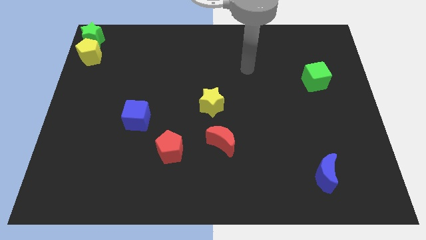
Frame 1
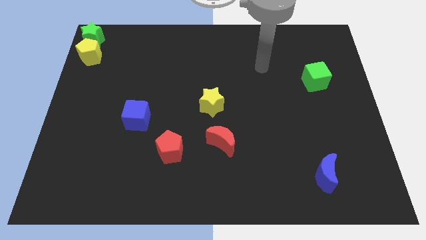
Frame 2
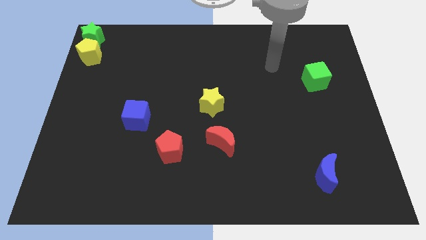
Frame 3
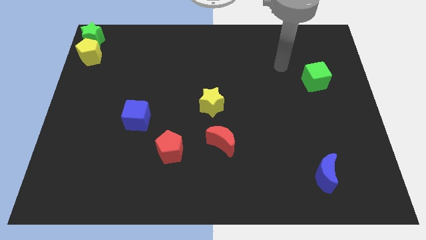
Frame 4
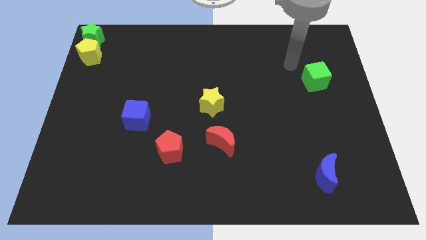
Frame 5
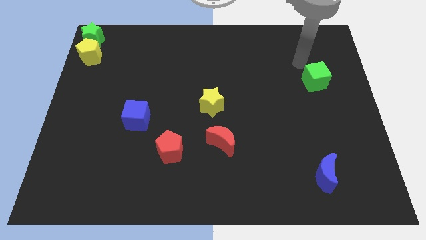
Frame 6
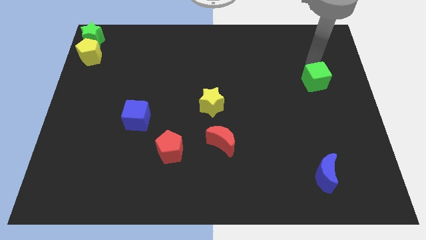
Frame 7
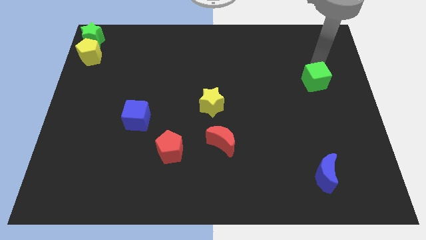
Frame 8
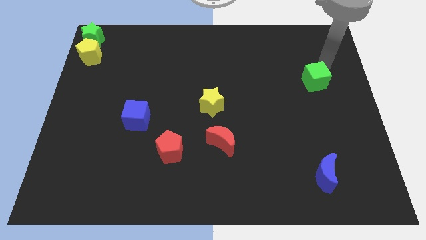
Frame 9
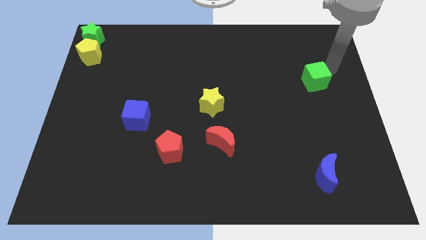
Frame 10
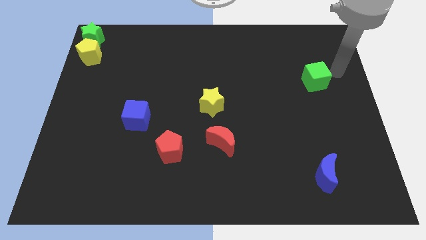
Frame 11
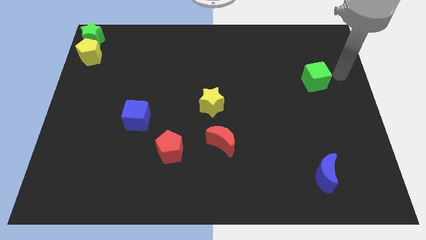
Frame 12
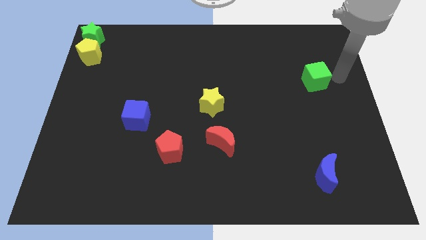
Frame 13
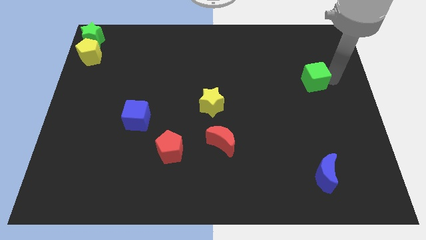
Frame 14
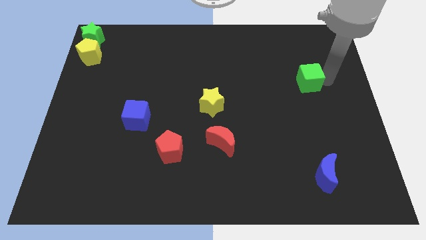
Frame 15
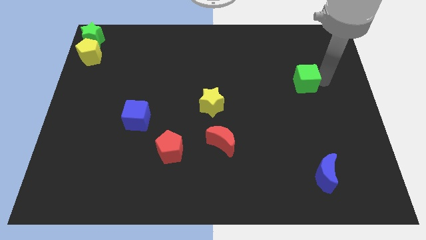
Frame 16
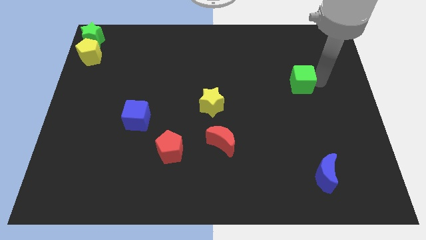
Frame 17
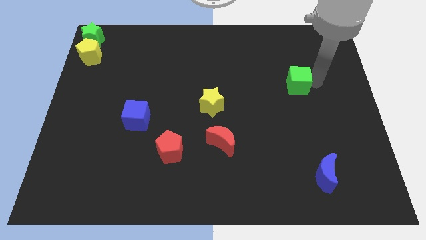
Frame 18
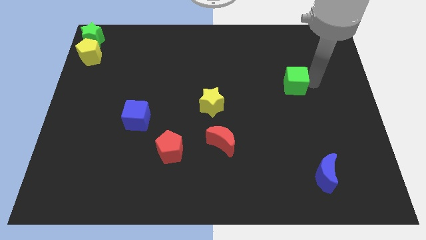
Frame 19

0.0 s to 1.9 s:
move green cube towards yellow star

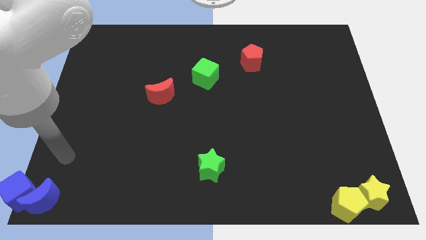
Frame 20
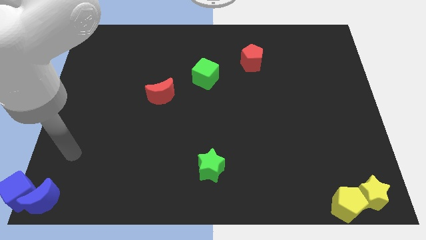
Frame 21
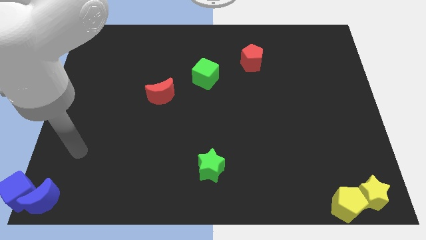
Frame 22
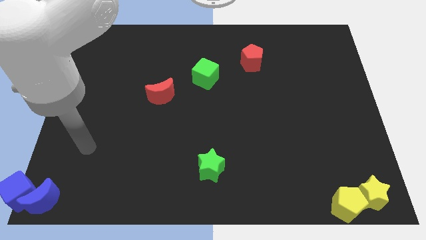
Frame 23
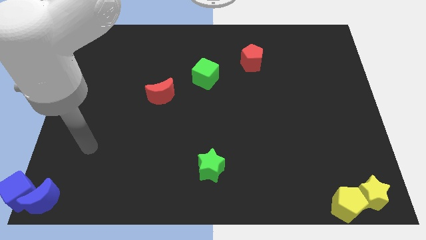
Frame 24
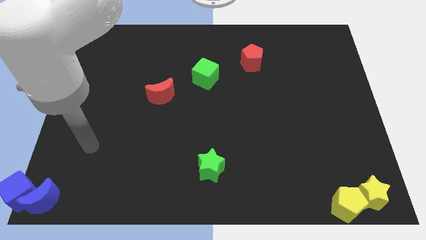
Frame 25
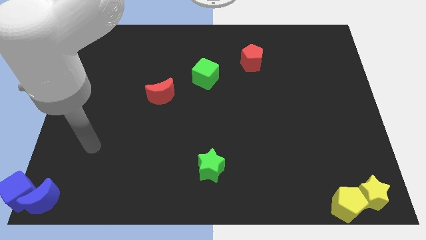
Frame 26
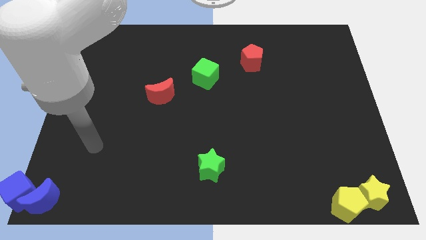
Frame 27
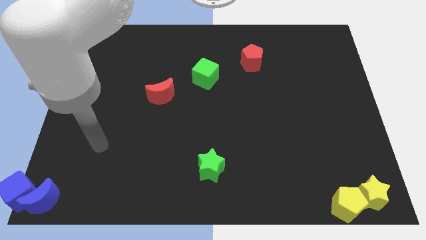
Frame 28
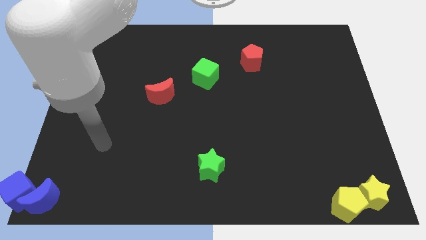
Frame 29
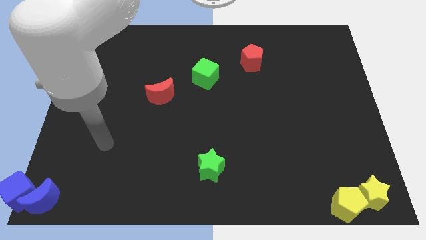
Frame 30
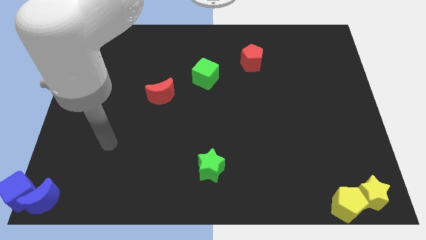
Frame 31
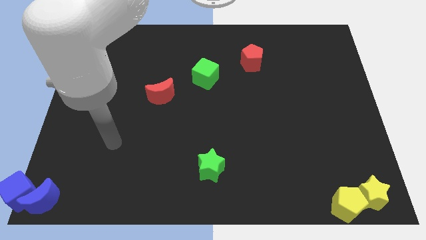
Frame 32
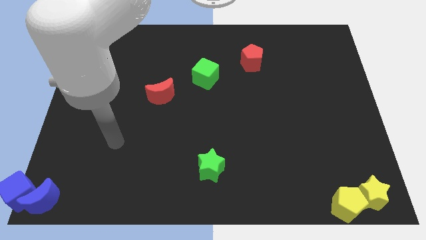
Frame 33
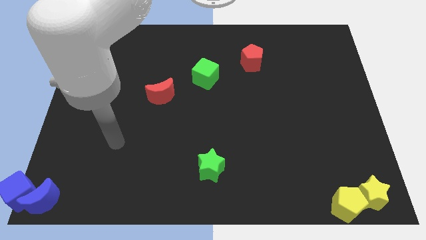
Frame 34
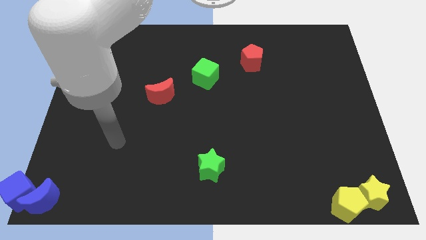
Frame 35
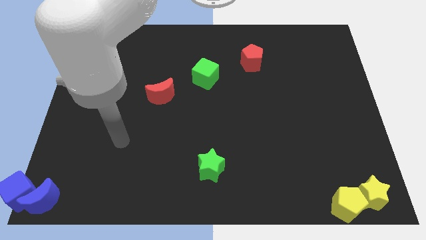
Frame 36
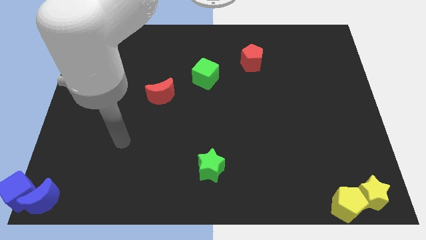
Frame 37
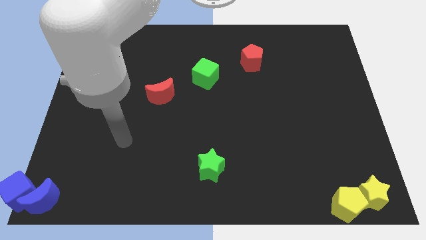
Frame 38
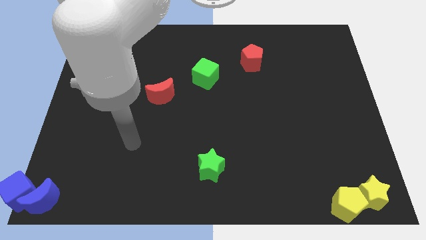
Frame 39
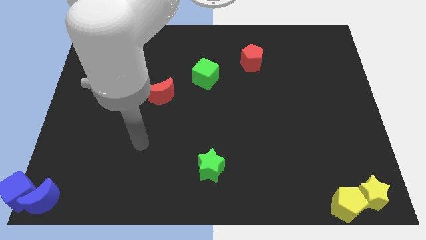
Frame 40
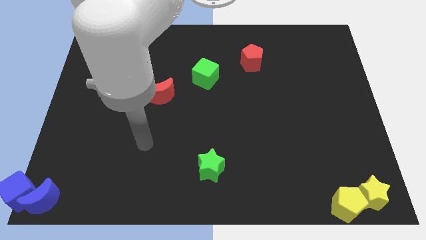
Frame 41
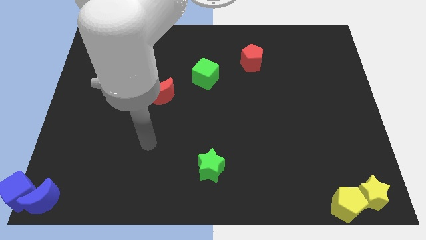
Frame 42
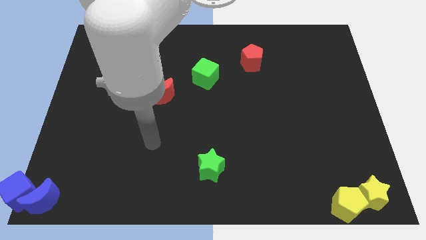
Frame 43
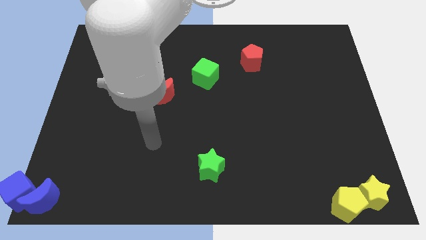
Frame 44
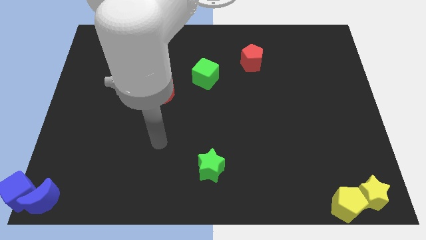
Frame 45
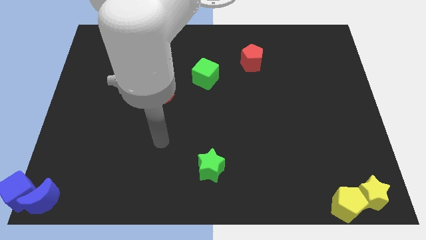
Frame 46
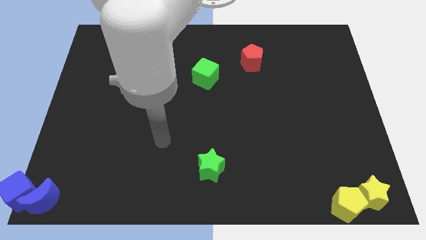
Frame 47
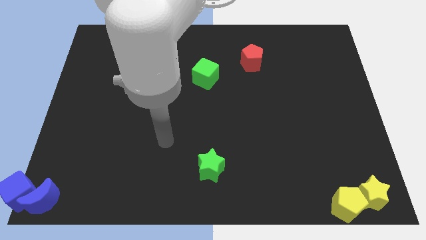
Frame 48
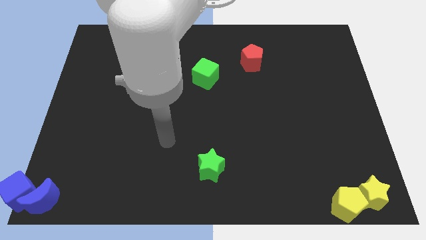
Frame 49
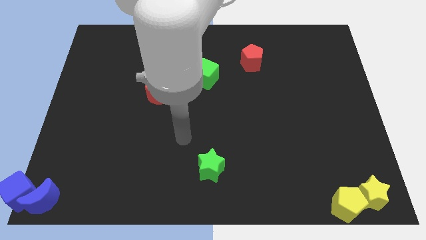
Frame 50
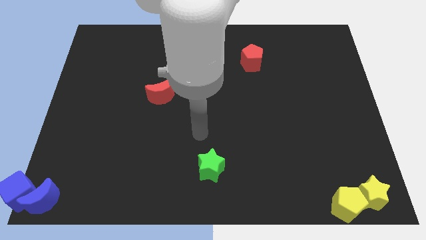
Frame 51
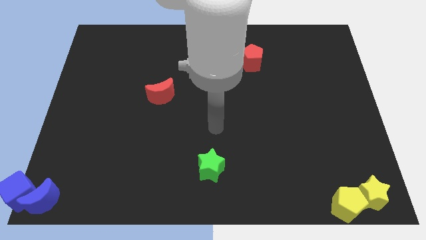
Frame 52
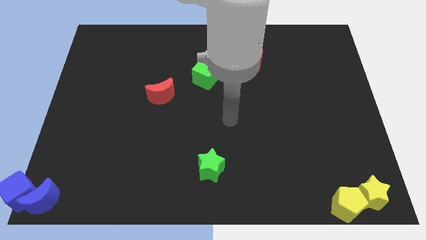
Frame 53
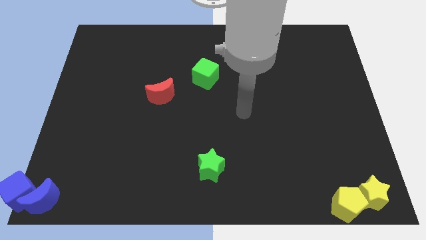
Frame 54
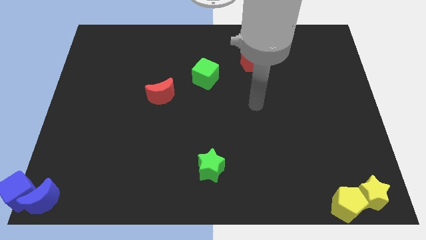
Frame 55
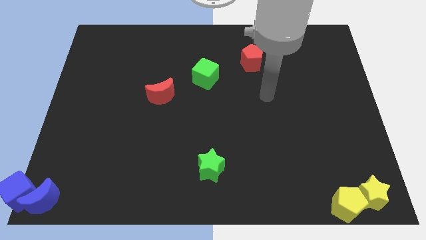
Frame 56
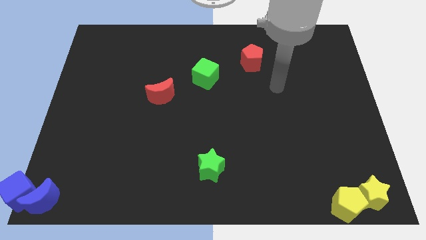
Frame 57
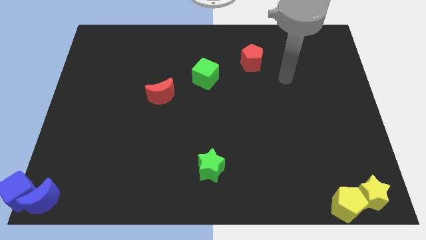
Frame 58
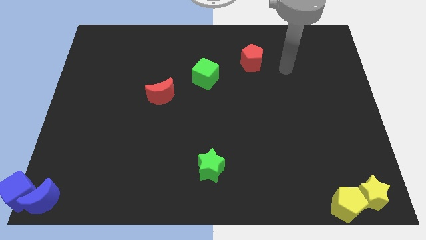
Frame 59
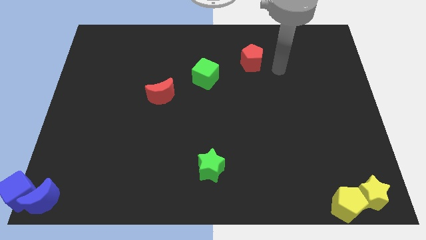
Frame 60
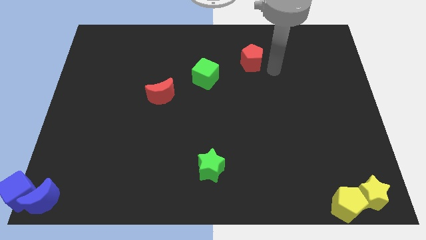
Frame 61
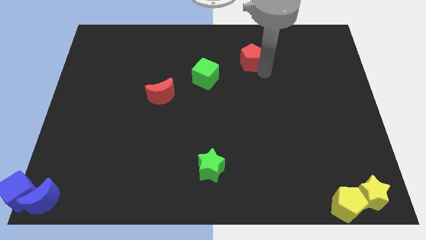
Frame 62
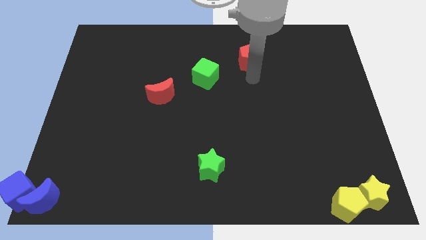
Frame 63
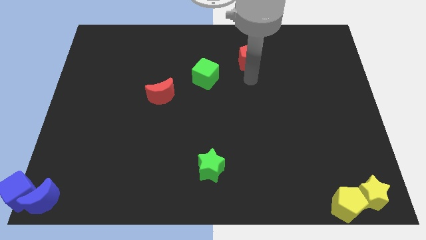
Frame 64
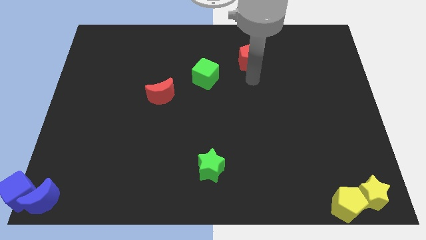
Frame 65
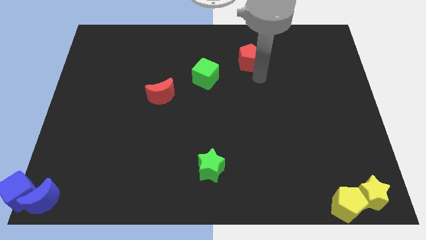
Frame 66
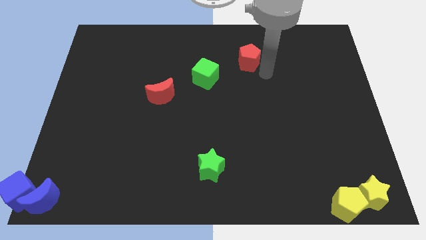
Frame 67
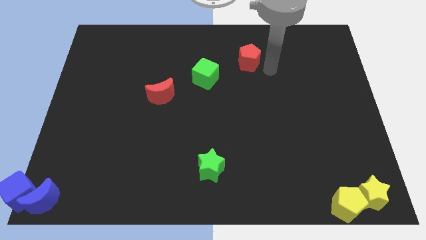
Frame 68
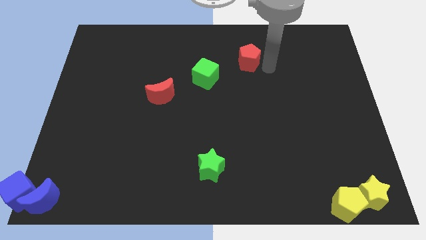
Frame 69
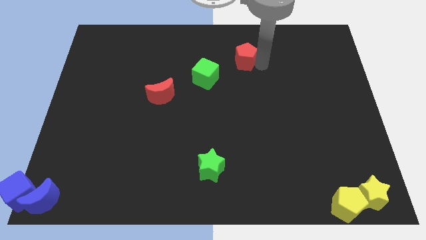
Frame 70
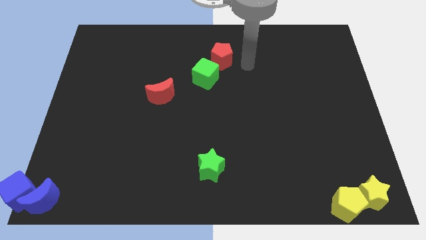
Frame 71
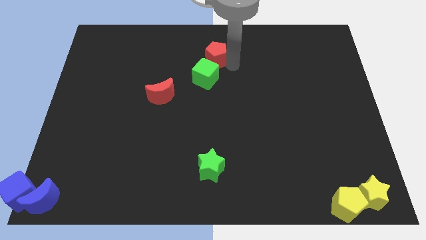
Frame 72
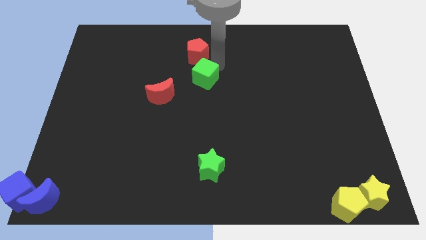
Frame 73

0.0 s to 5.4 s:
place red pentagon above the green cube

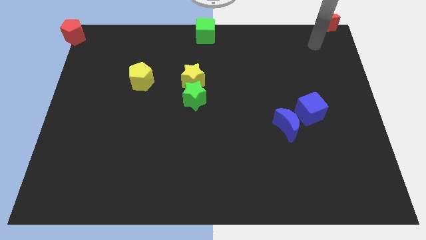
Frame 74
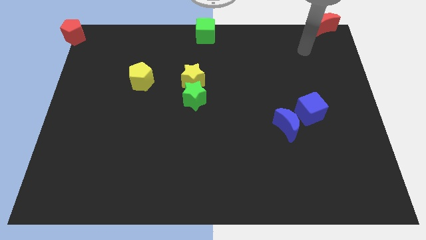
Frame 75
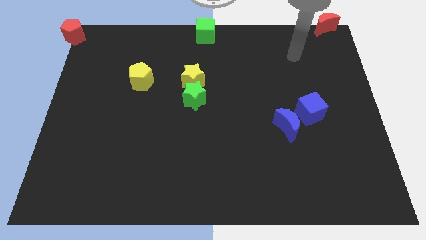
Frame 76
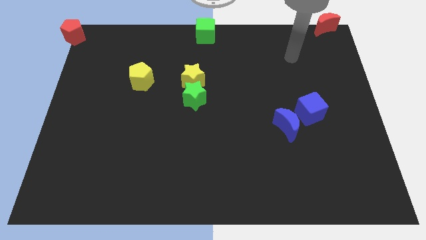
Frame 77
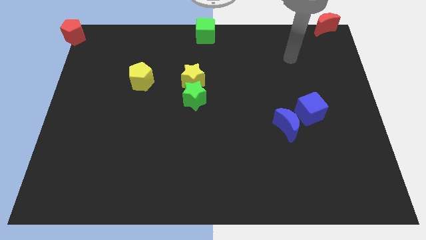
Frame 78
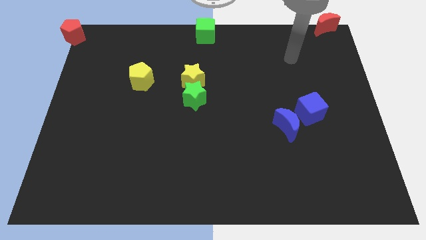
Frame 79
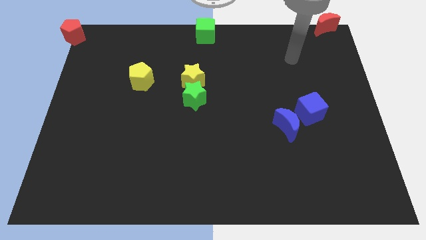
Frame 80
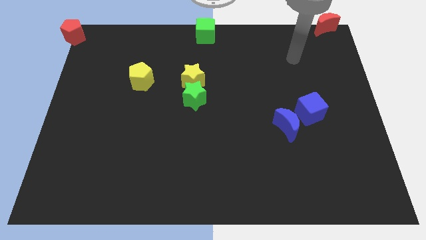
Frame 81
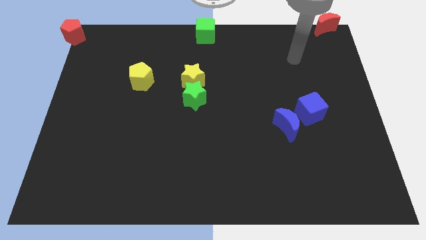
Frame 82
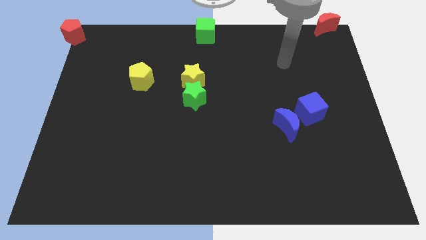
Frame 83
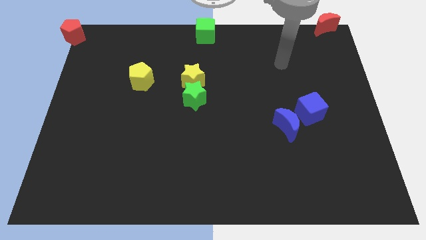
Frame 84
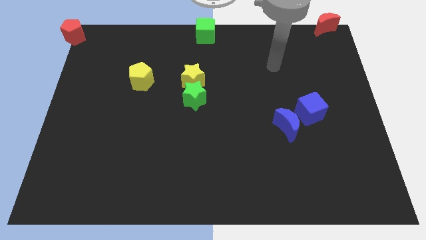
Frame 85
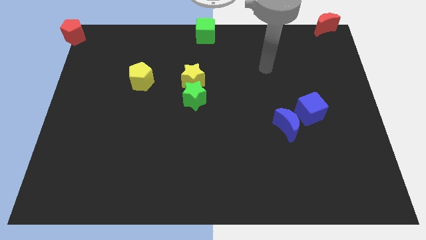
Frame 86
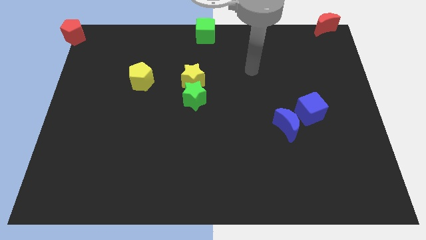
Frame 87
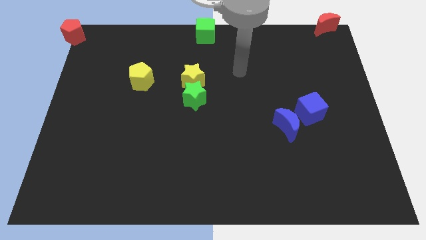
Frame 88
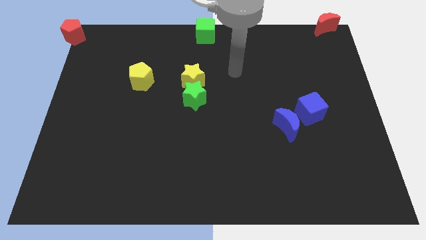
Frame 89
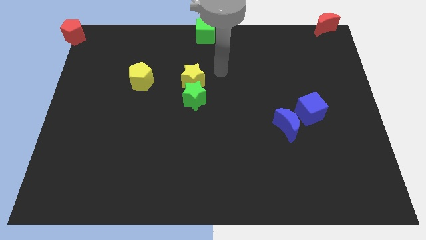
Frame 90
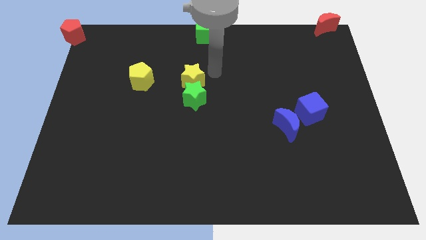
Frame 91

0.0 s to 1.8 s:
move the arm away from the red moon
